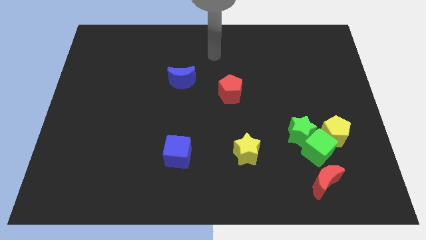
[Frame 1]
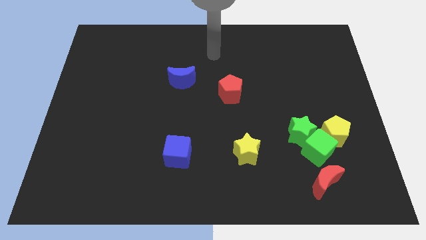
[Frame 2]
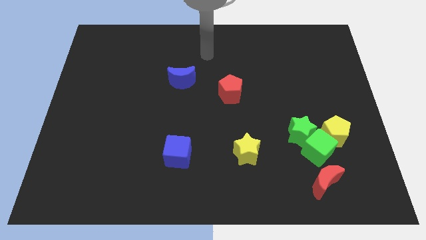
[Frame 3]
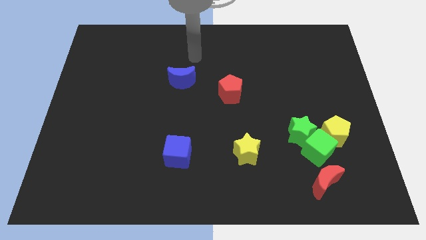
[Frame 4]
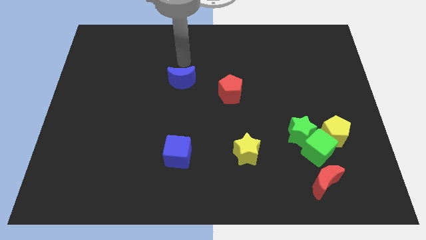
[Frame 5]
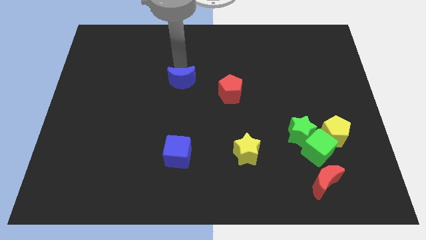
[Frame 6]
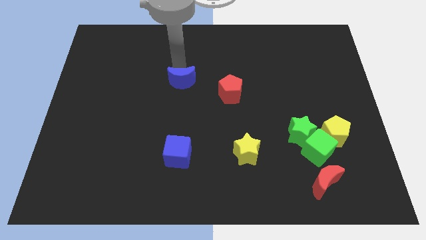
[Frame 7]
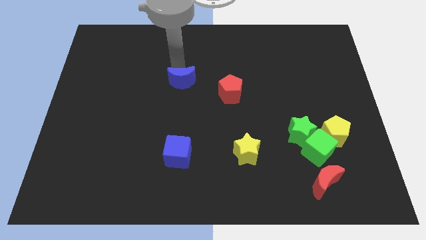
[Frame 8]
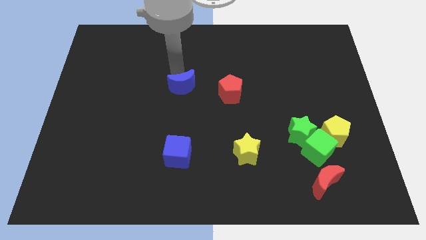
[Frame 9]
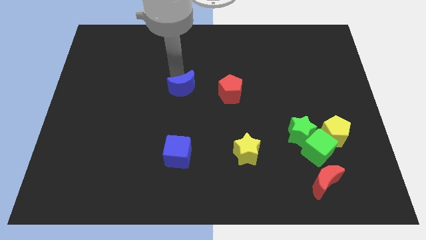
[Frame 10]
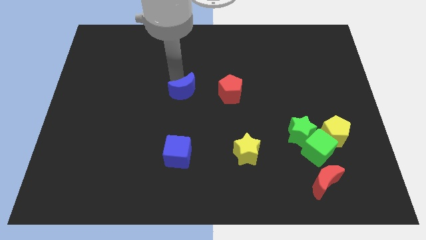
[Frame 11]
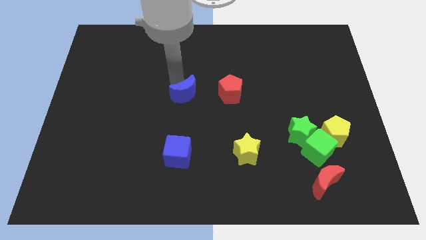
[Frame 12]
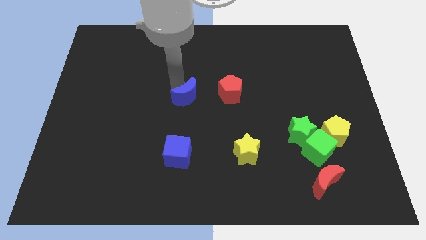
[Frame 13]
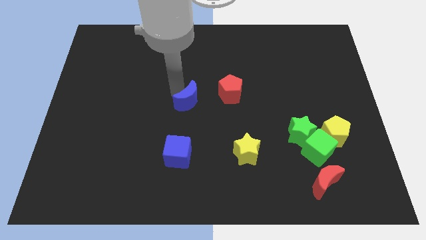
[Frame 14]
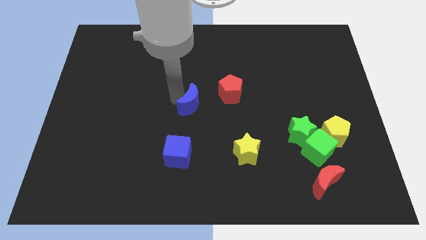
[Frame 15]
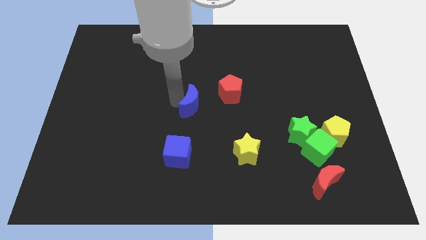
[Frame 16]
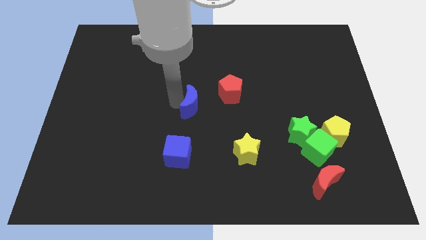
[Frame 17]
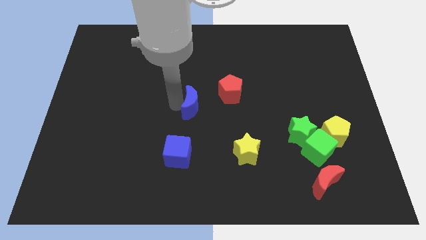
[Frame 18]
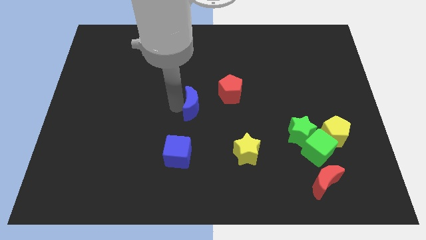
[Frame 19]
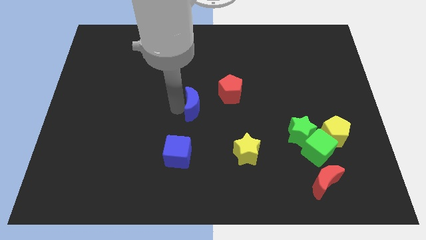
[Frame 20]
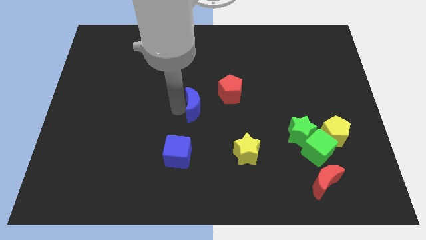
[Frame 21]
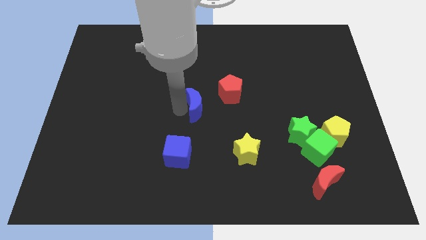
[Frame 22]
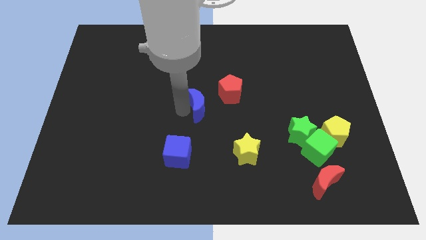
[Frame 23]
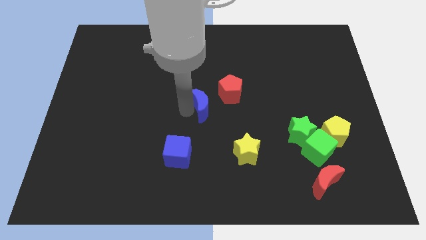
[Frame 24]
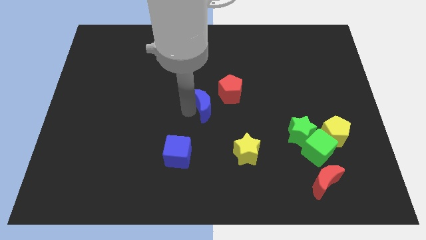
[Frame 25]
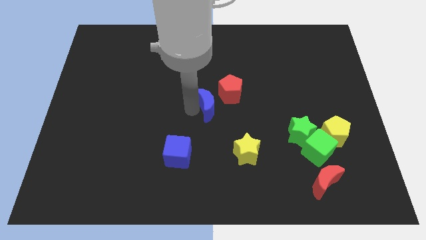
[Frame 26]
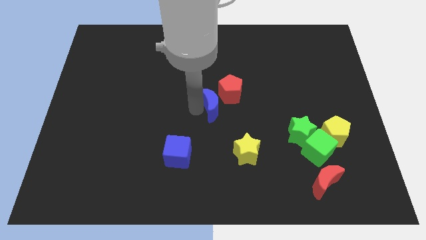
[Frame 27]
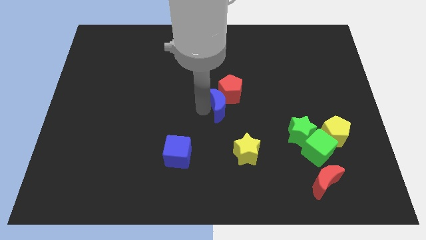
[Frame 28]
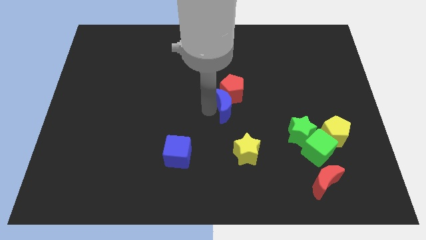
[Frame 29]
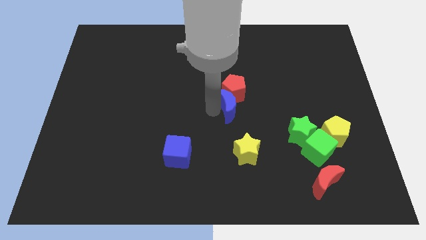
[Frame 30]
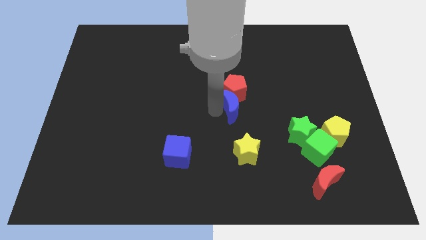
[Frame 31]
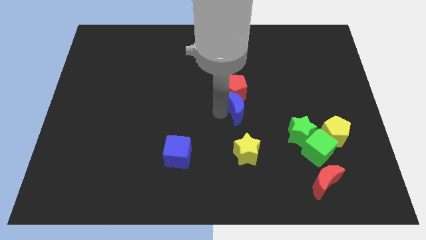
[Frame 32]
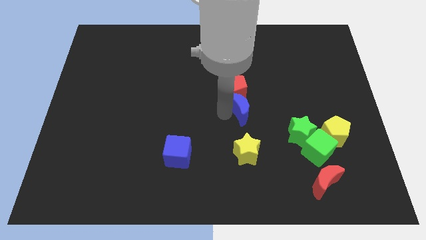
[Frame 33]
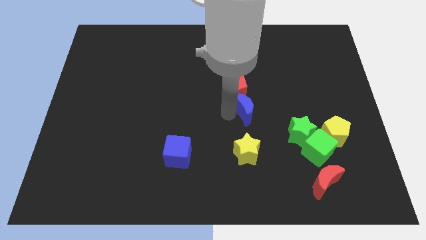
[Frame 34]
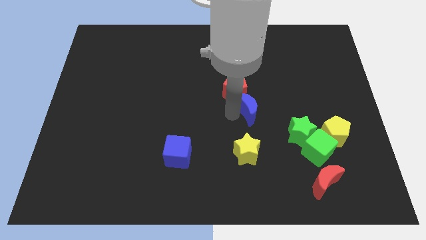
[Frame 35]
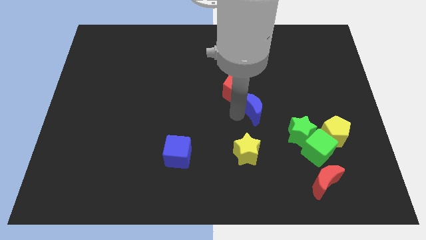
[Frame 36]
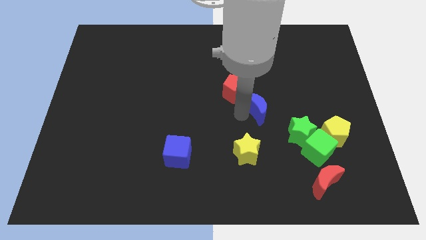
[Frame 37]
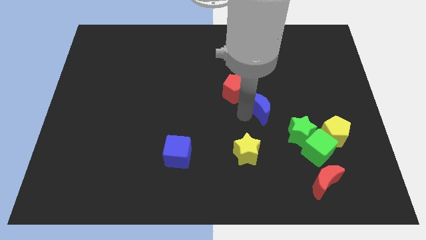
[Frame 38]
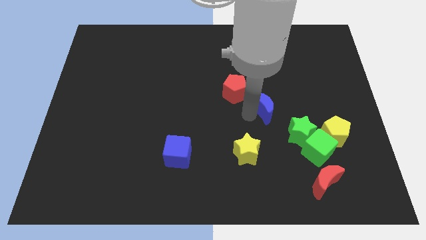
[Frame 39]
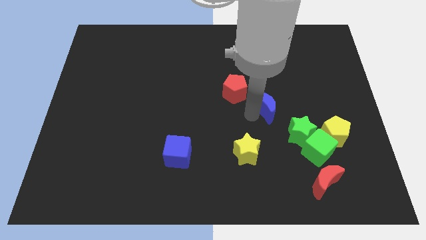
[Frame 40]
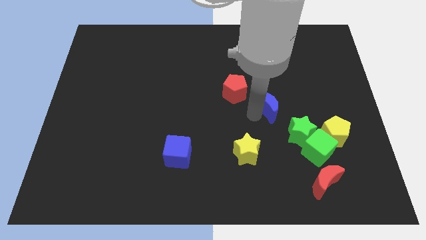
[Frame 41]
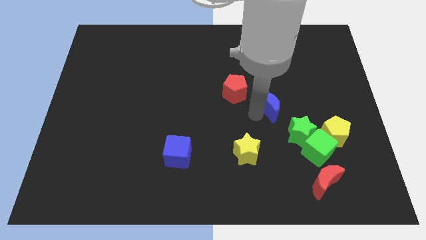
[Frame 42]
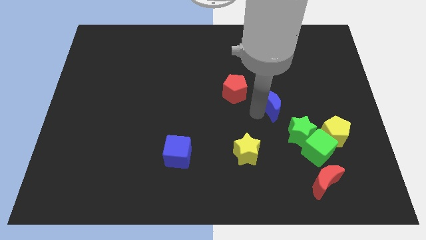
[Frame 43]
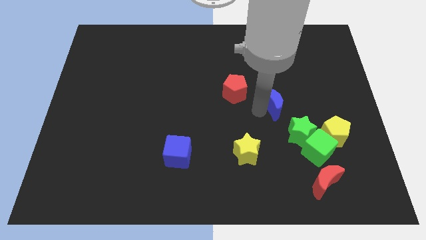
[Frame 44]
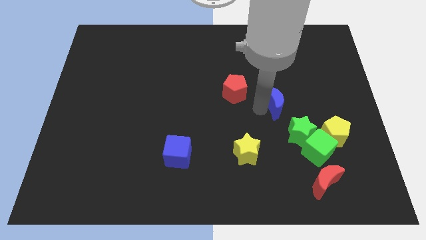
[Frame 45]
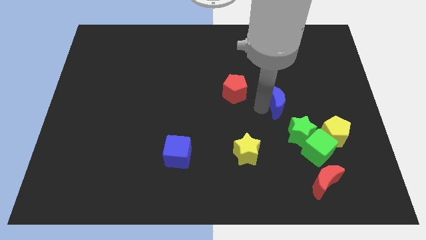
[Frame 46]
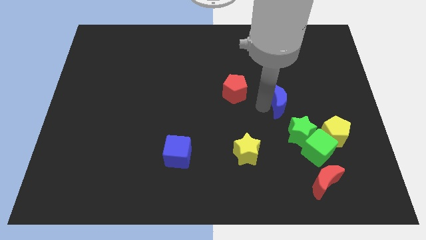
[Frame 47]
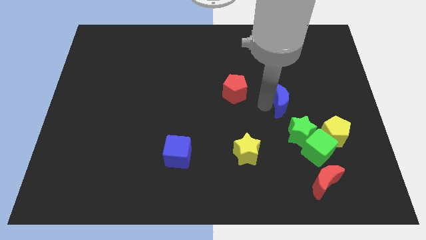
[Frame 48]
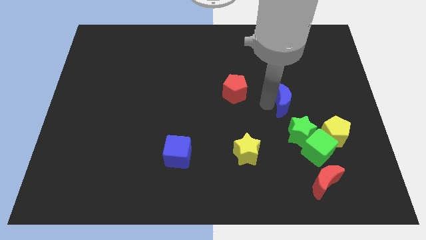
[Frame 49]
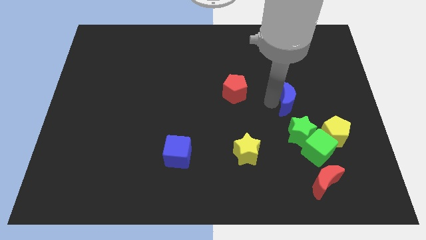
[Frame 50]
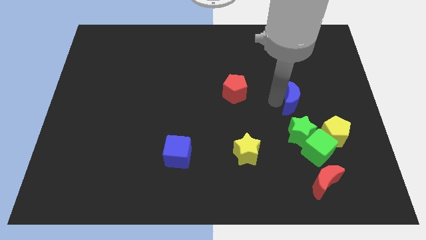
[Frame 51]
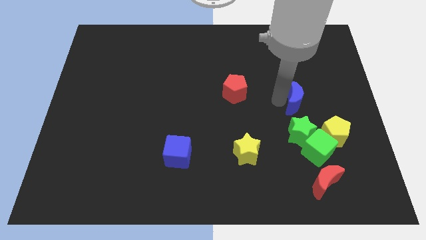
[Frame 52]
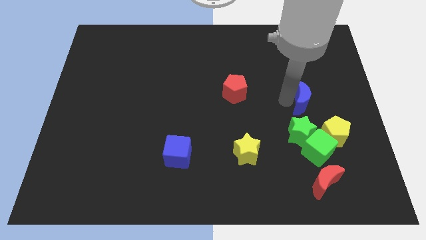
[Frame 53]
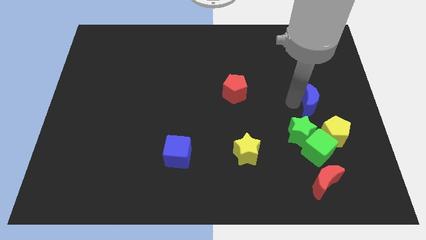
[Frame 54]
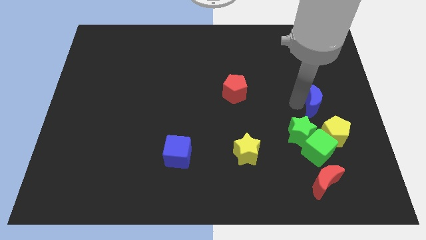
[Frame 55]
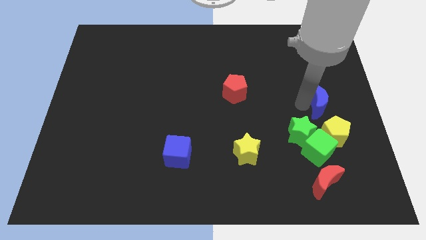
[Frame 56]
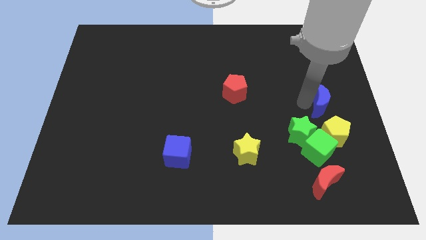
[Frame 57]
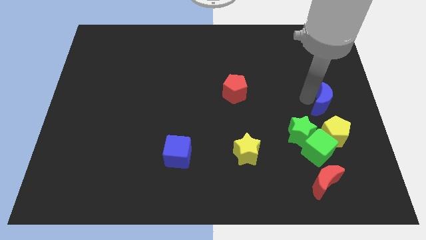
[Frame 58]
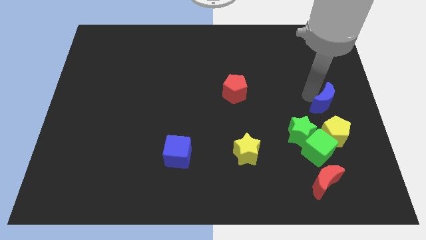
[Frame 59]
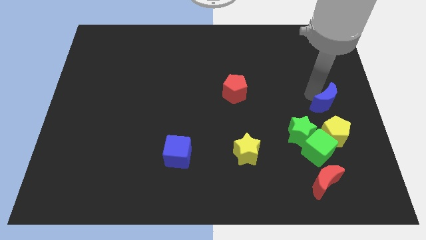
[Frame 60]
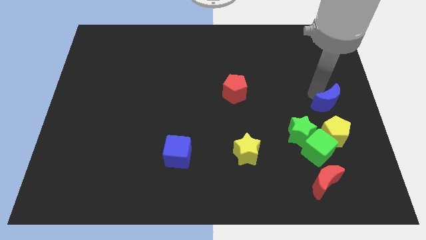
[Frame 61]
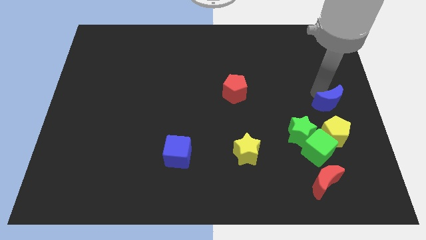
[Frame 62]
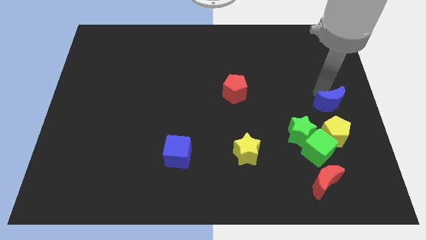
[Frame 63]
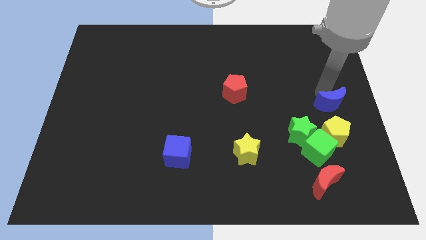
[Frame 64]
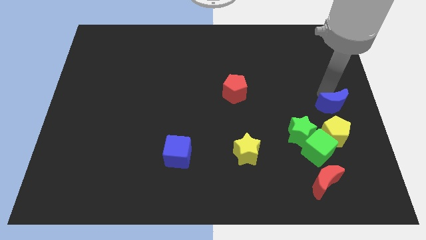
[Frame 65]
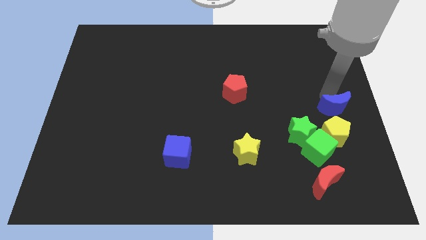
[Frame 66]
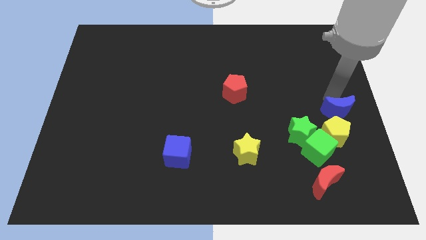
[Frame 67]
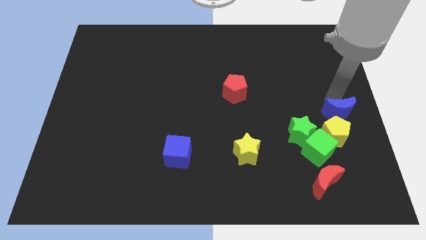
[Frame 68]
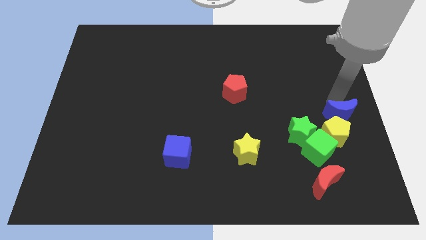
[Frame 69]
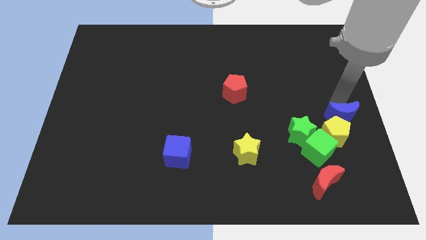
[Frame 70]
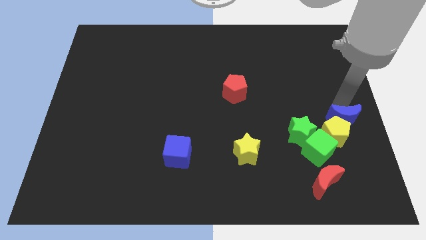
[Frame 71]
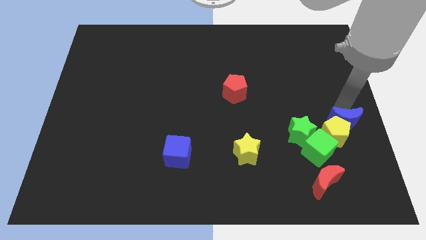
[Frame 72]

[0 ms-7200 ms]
put the blue moon next to the yellow pentagon

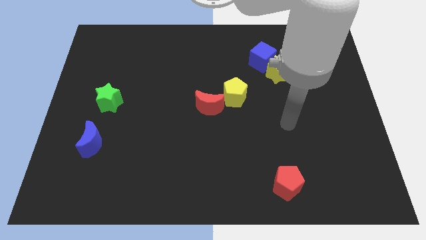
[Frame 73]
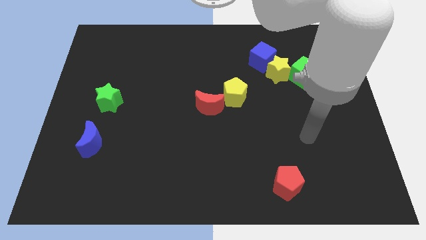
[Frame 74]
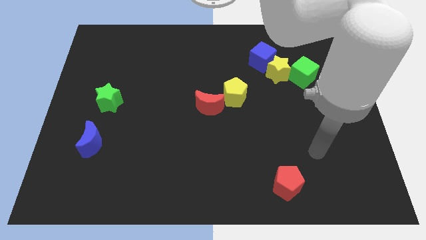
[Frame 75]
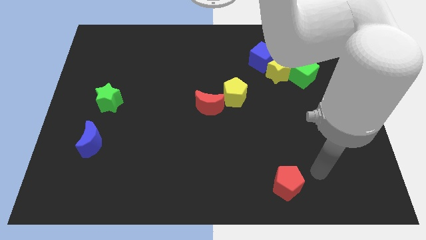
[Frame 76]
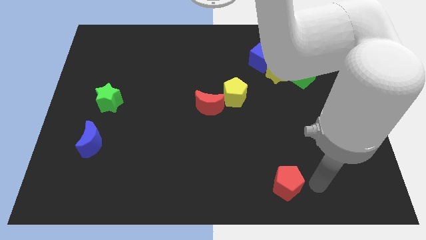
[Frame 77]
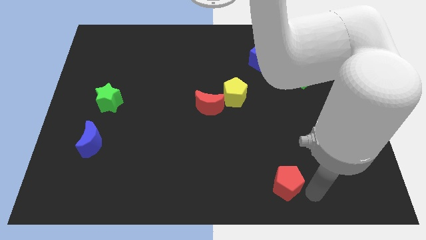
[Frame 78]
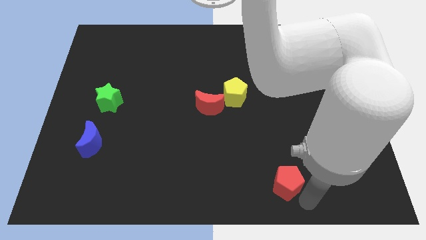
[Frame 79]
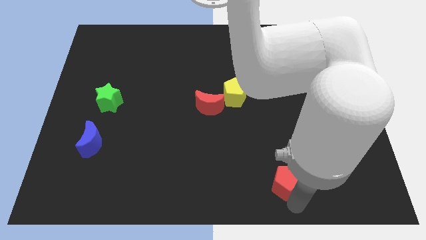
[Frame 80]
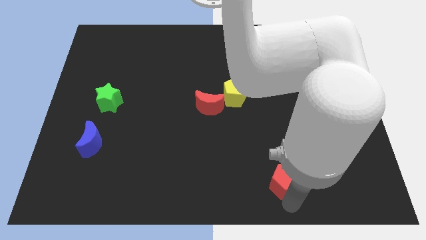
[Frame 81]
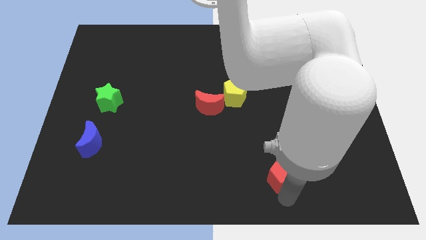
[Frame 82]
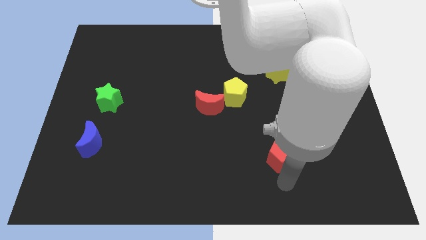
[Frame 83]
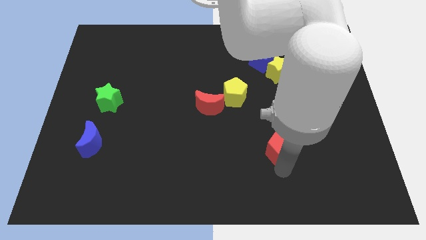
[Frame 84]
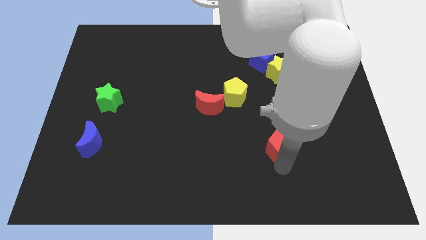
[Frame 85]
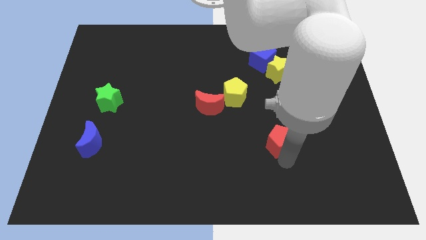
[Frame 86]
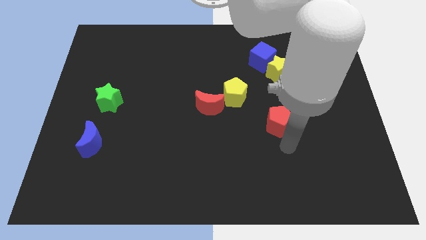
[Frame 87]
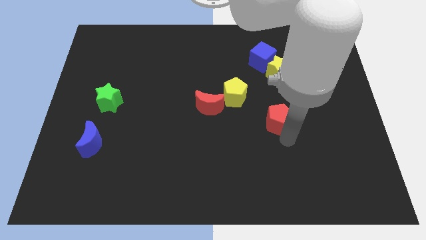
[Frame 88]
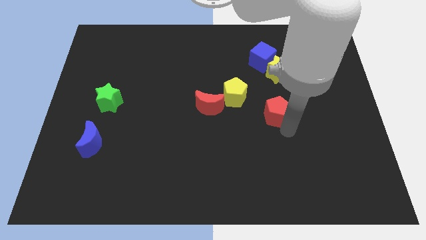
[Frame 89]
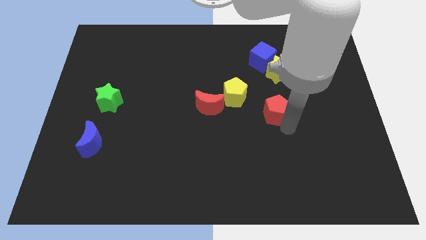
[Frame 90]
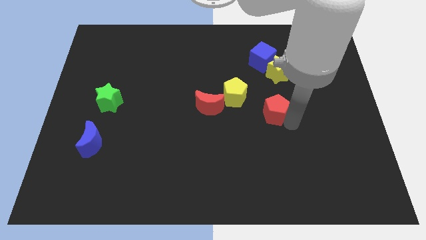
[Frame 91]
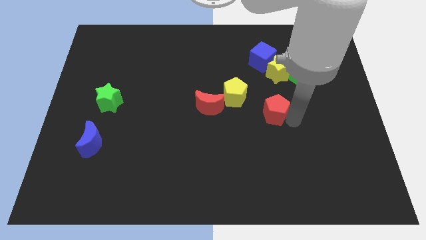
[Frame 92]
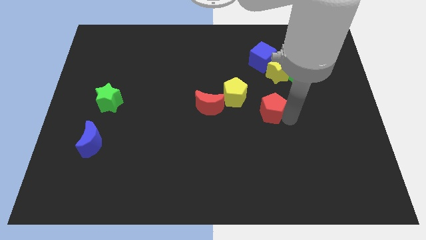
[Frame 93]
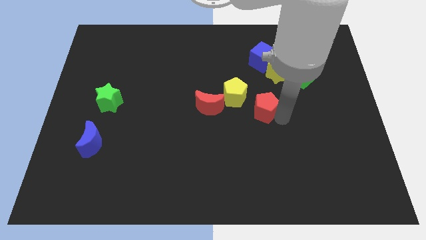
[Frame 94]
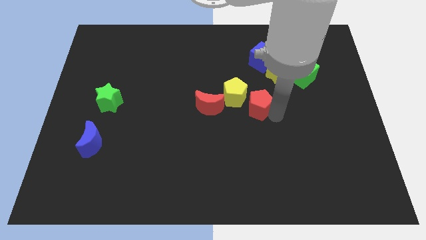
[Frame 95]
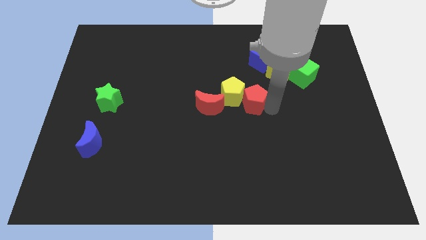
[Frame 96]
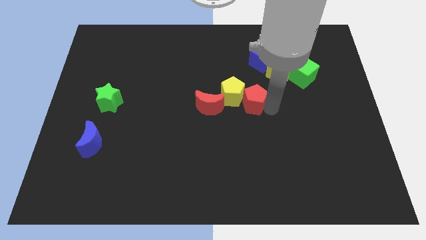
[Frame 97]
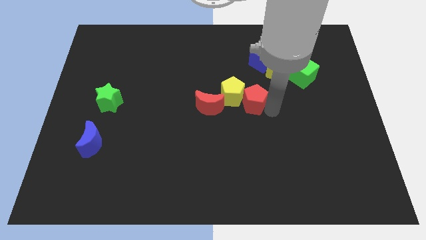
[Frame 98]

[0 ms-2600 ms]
push the red pentagon next to the yellow pentagon
